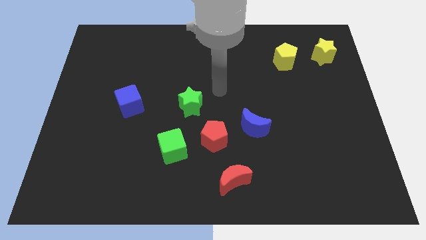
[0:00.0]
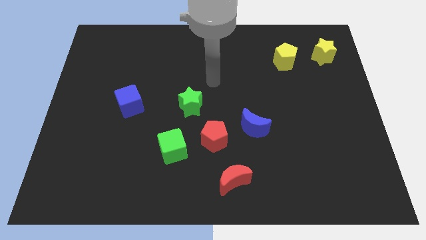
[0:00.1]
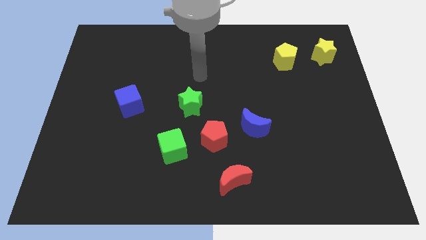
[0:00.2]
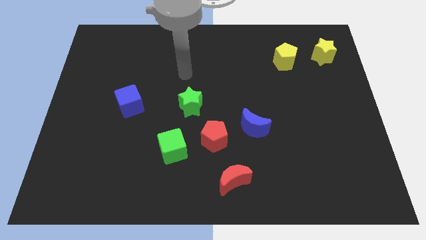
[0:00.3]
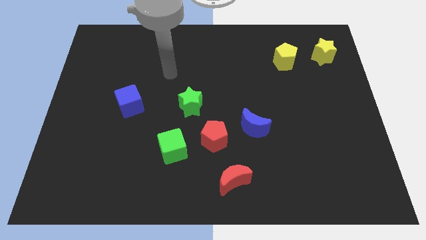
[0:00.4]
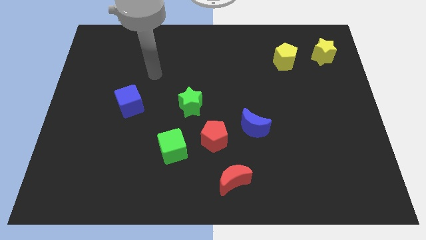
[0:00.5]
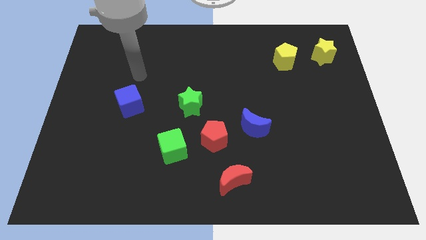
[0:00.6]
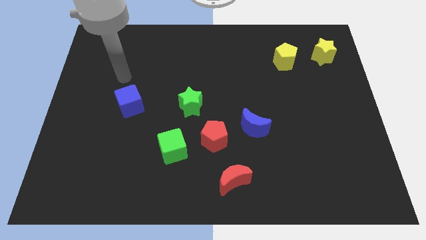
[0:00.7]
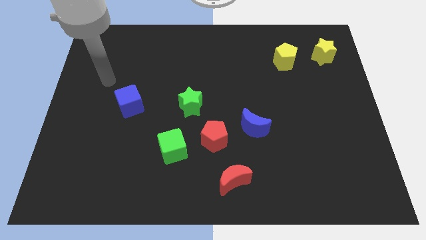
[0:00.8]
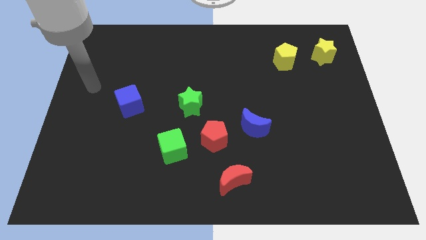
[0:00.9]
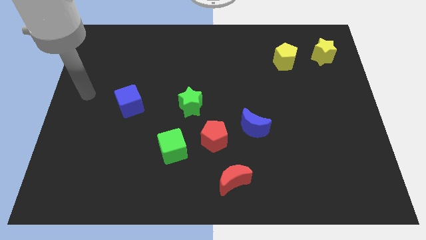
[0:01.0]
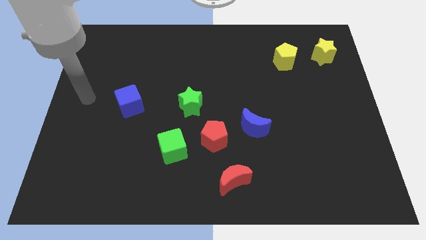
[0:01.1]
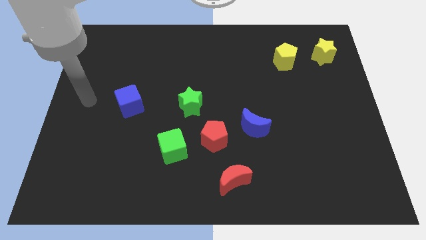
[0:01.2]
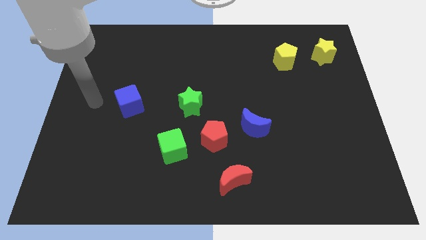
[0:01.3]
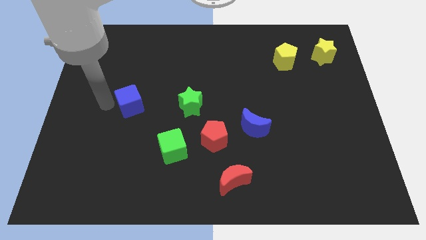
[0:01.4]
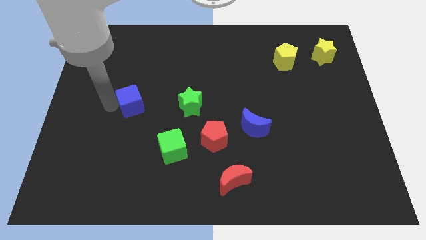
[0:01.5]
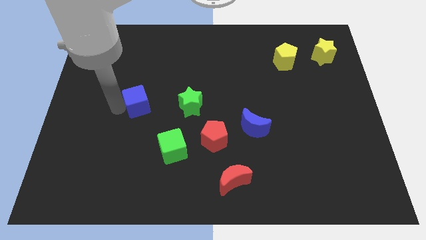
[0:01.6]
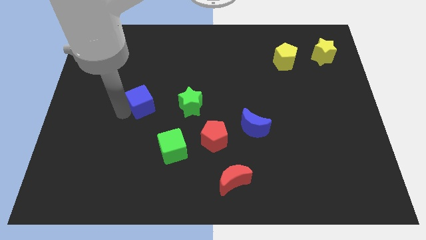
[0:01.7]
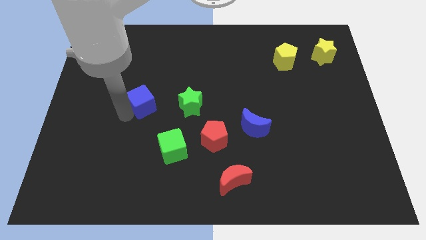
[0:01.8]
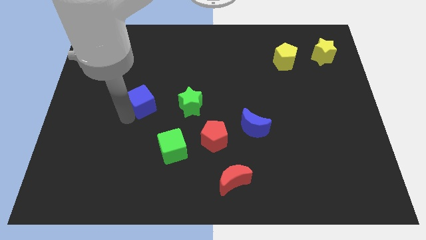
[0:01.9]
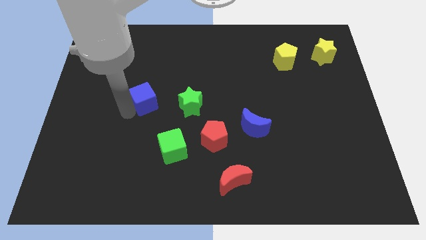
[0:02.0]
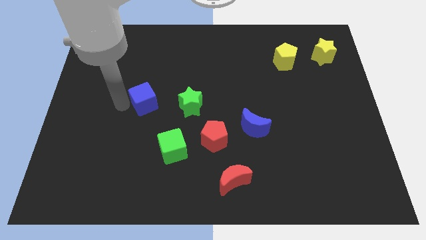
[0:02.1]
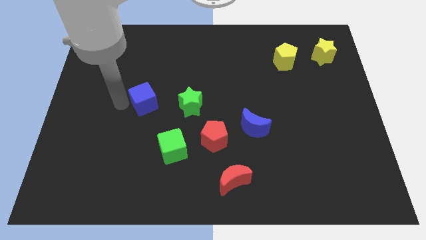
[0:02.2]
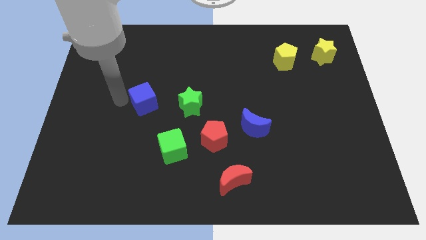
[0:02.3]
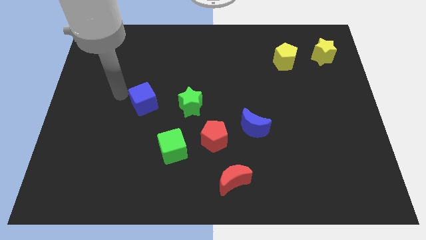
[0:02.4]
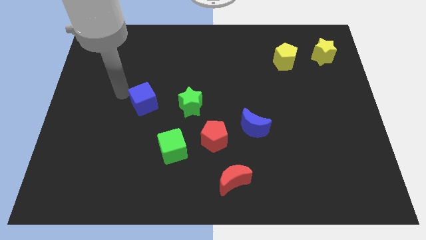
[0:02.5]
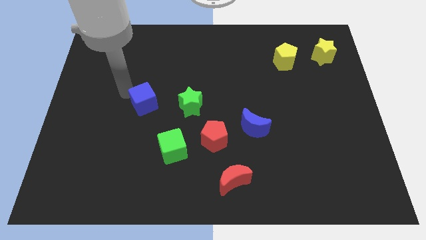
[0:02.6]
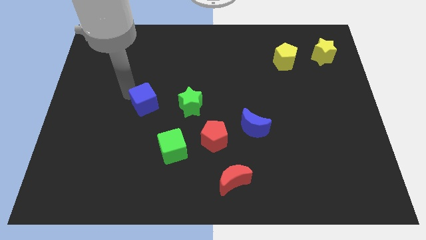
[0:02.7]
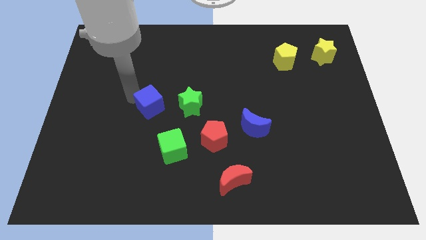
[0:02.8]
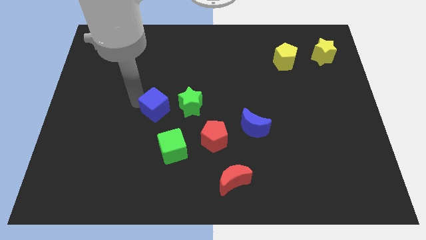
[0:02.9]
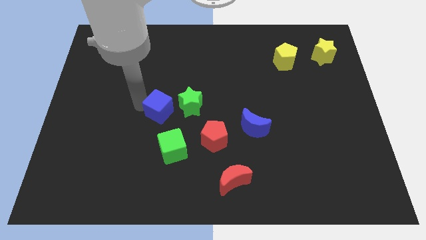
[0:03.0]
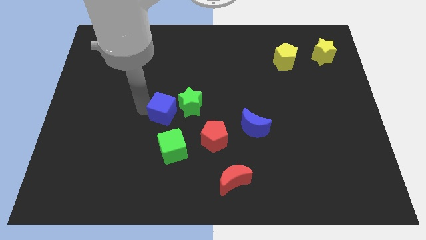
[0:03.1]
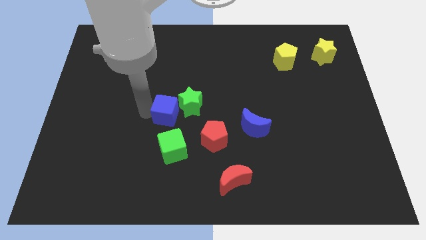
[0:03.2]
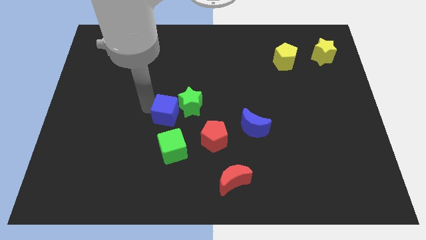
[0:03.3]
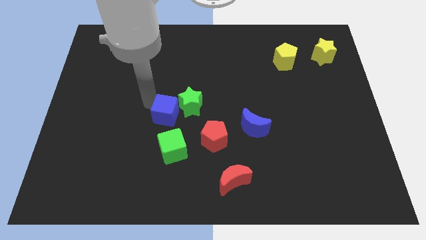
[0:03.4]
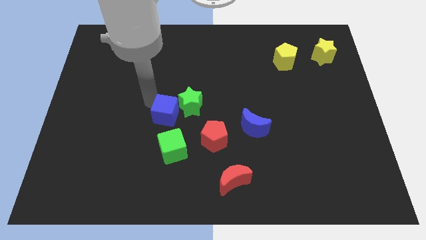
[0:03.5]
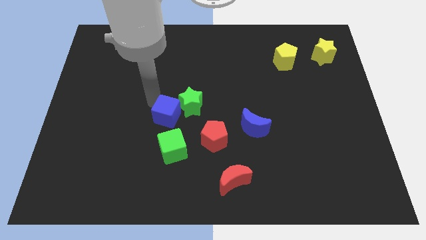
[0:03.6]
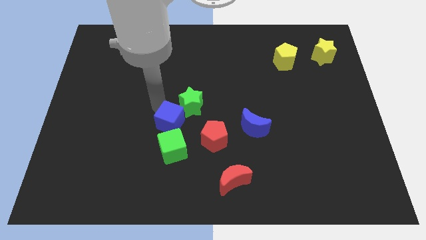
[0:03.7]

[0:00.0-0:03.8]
move the blue cube towards the left of green star

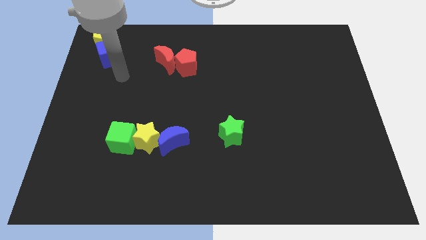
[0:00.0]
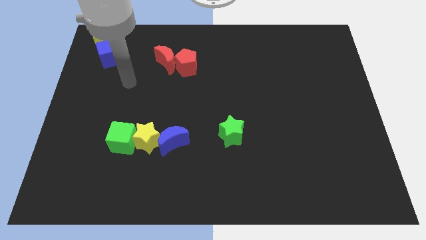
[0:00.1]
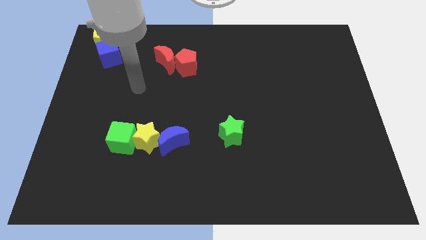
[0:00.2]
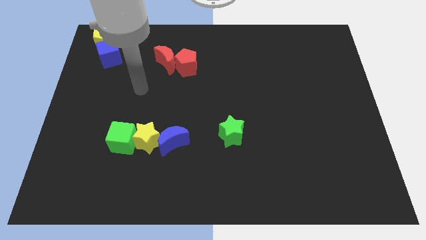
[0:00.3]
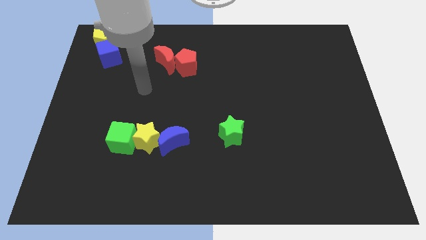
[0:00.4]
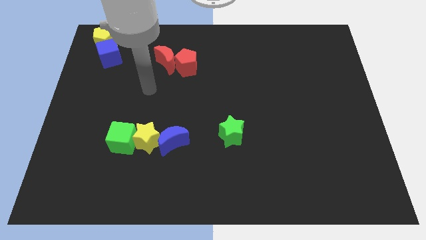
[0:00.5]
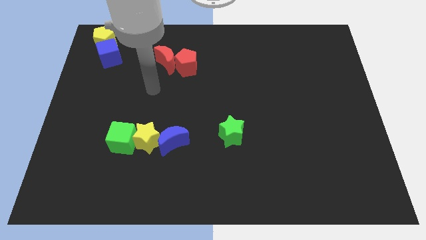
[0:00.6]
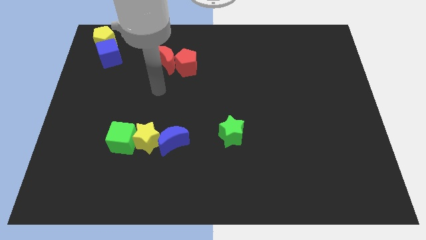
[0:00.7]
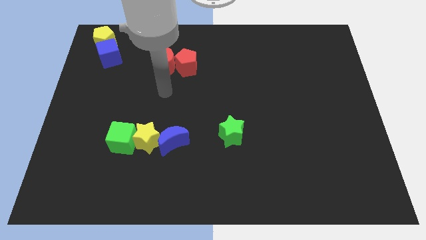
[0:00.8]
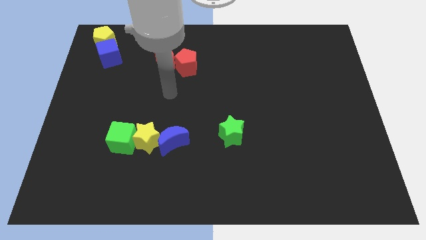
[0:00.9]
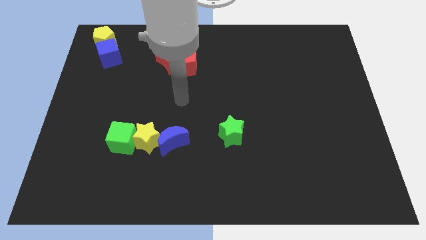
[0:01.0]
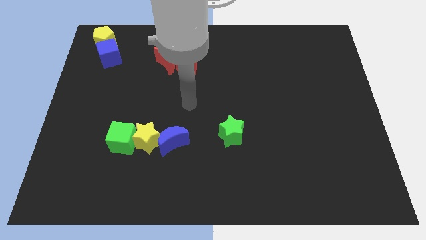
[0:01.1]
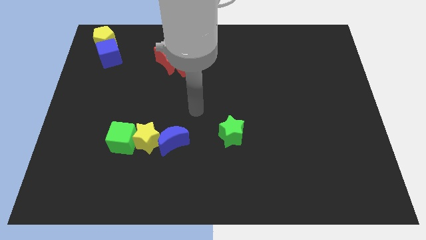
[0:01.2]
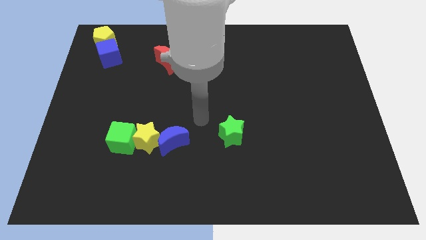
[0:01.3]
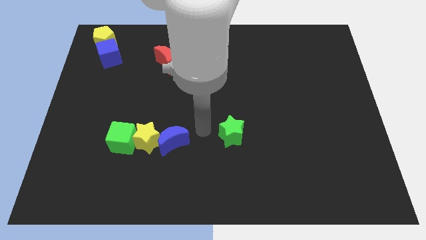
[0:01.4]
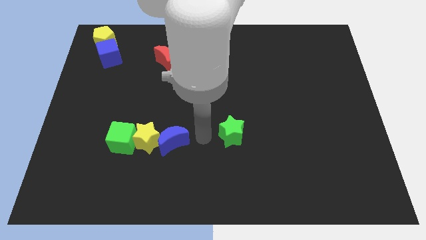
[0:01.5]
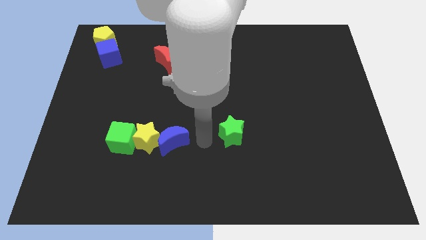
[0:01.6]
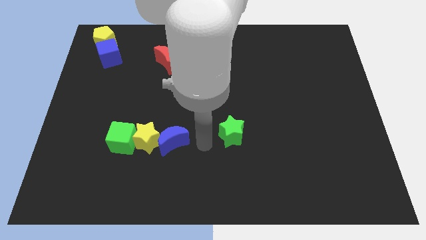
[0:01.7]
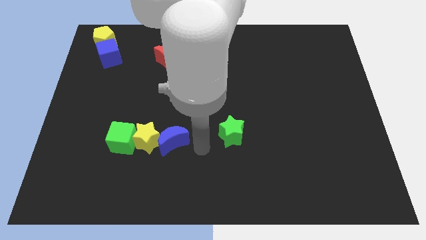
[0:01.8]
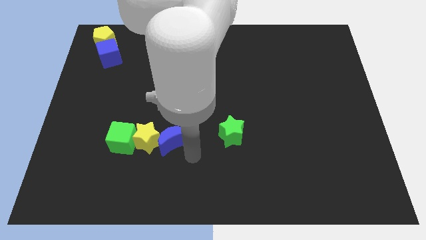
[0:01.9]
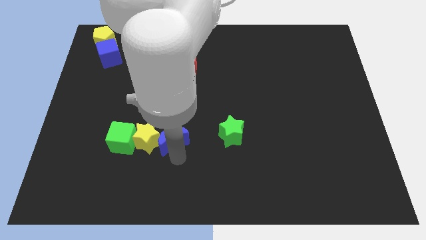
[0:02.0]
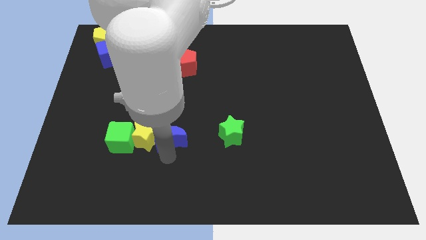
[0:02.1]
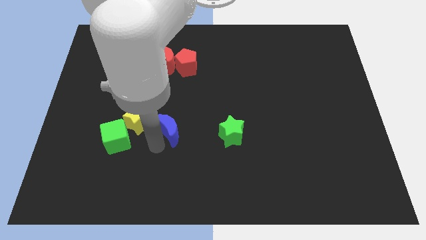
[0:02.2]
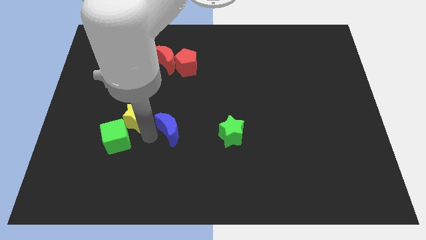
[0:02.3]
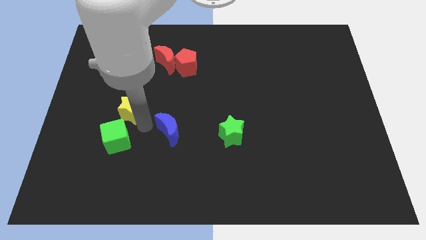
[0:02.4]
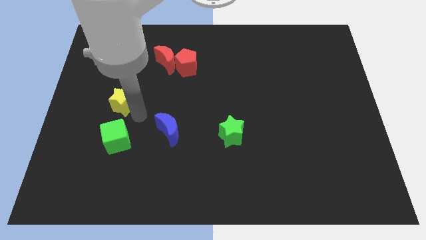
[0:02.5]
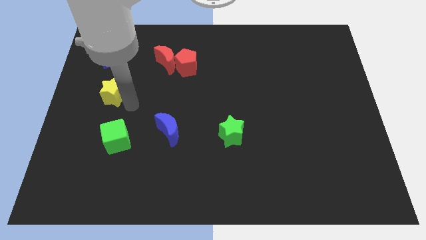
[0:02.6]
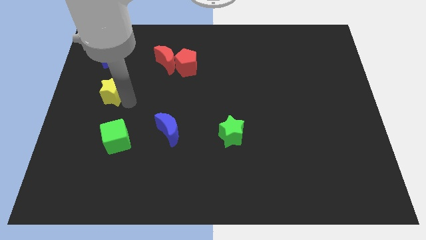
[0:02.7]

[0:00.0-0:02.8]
move the yellow star to the top of the green cube

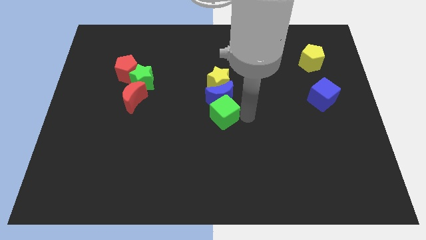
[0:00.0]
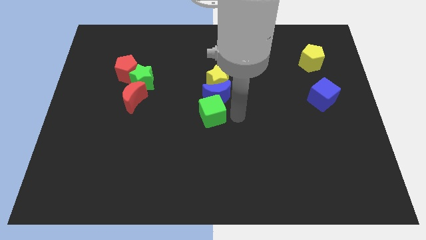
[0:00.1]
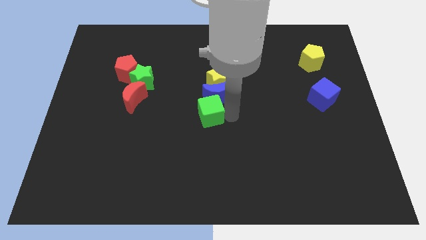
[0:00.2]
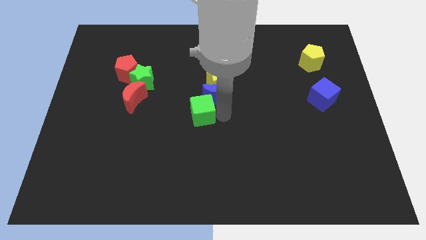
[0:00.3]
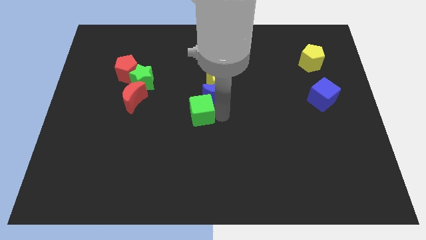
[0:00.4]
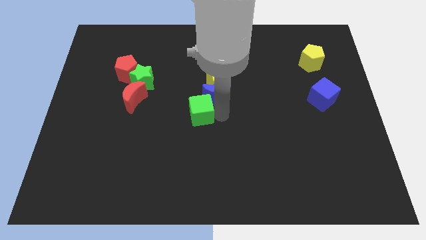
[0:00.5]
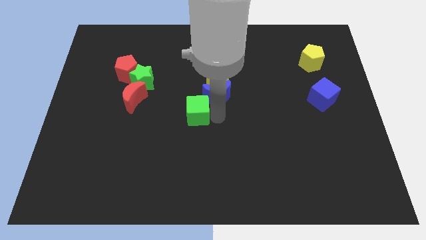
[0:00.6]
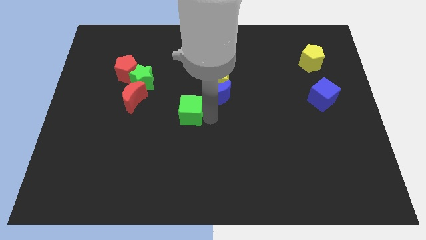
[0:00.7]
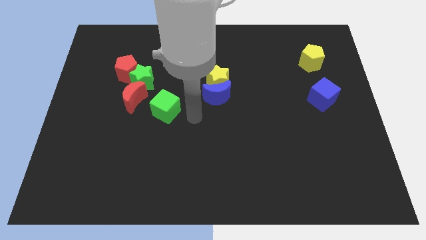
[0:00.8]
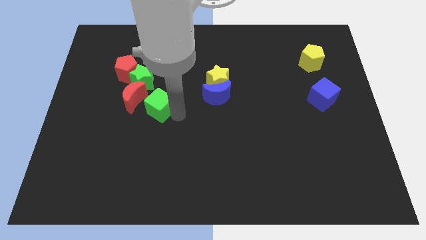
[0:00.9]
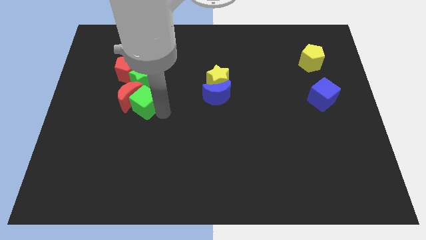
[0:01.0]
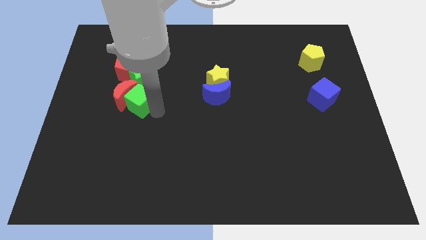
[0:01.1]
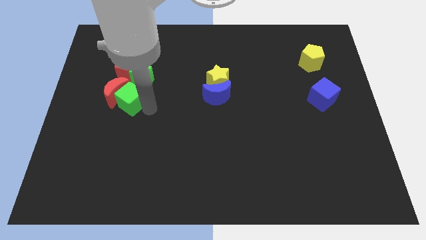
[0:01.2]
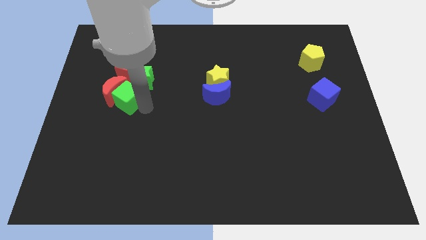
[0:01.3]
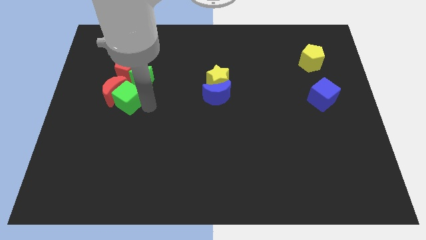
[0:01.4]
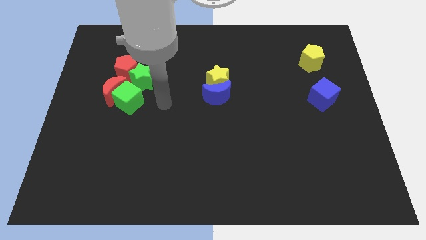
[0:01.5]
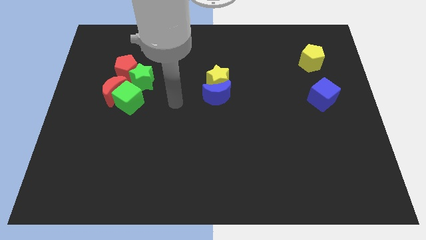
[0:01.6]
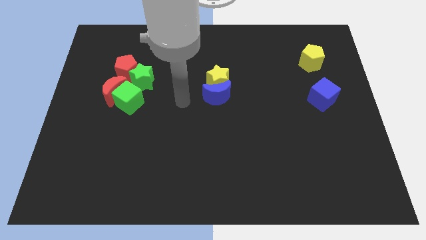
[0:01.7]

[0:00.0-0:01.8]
move green cube with red crescent to the left center

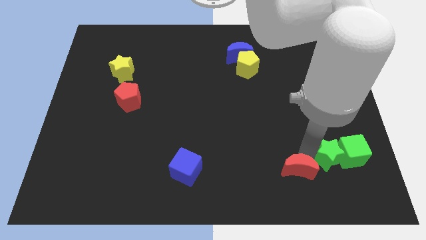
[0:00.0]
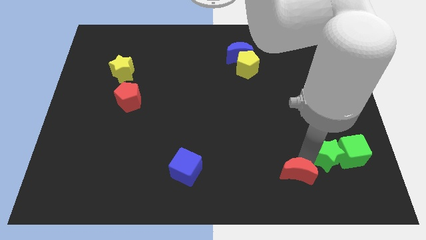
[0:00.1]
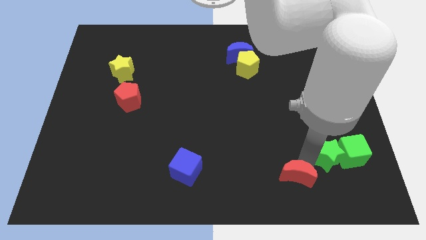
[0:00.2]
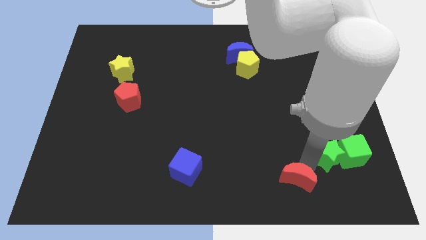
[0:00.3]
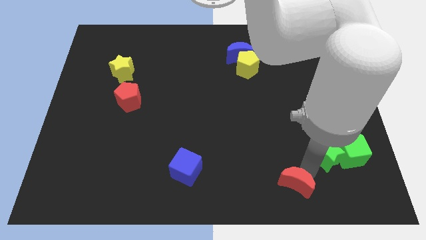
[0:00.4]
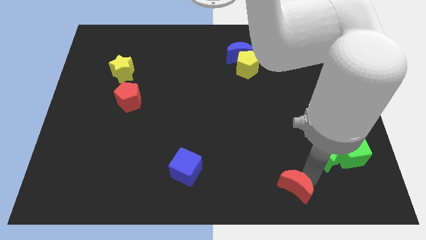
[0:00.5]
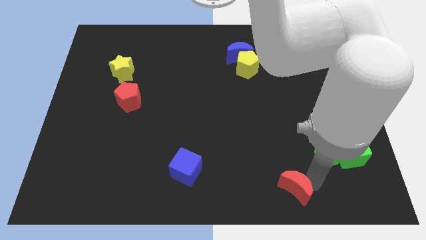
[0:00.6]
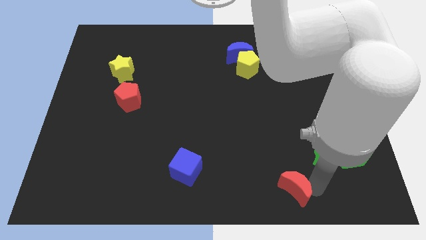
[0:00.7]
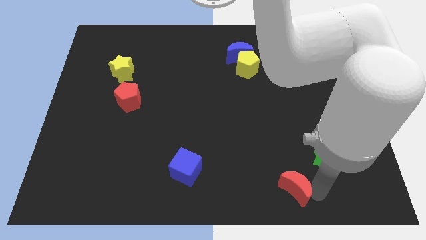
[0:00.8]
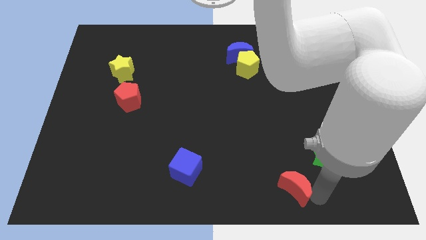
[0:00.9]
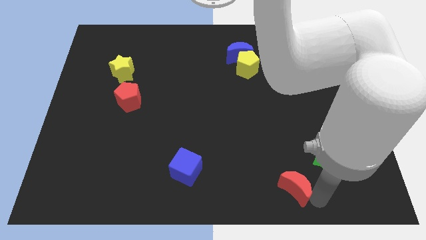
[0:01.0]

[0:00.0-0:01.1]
push red crescent to the bottom right
